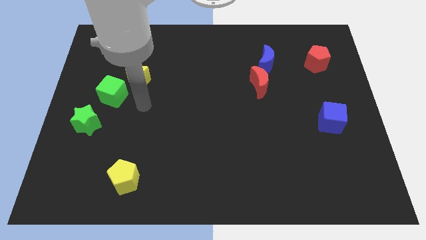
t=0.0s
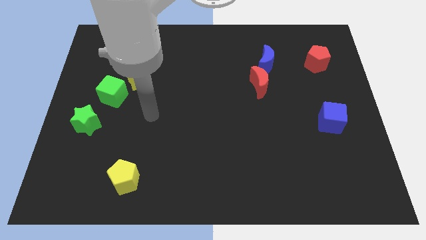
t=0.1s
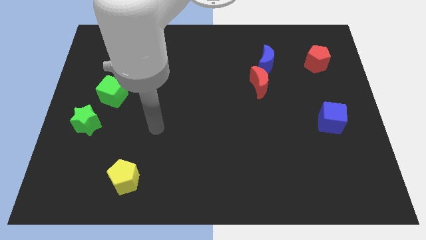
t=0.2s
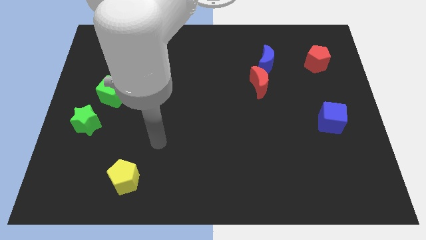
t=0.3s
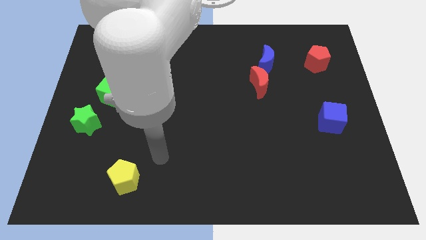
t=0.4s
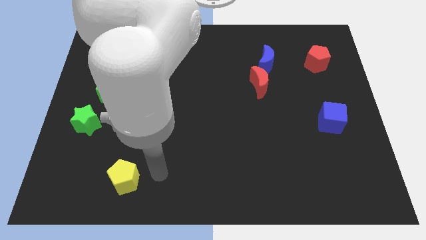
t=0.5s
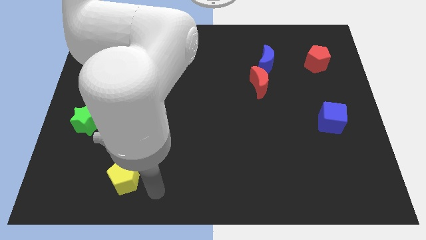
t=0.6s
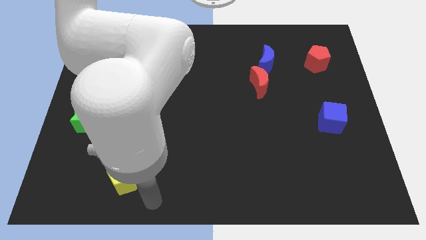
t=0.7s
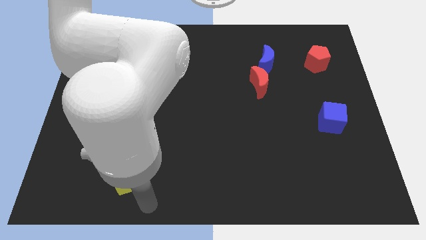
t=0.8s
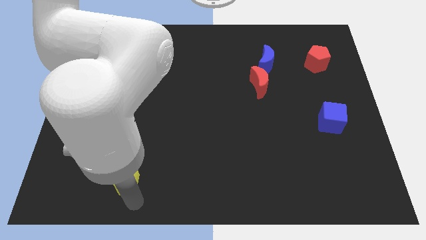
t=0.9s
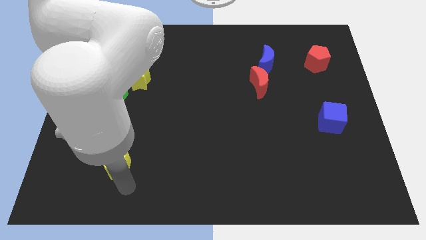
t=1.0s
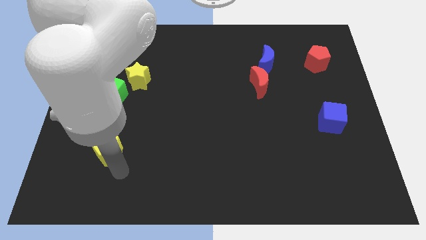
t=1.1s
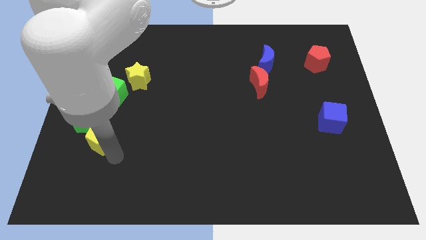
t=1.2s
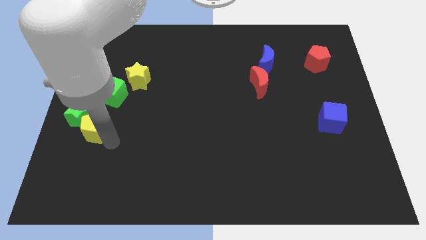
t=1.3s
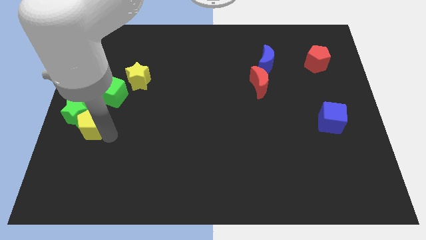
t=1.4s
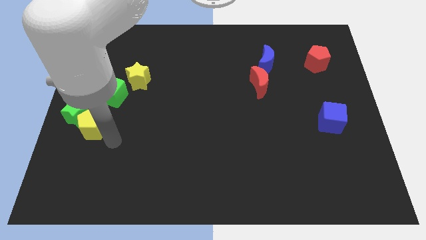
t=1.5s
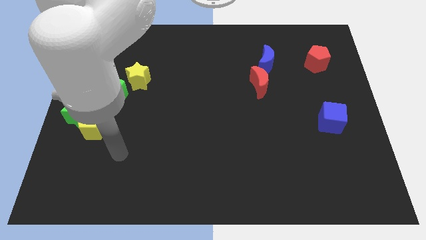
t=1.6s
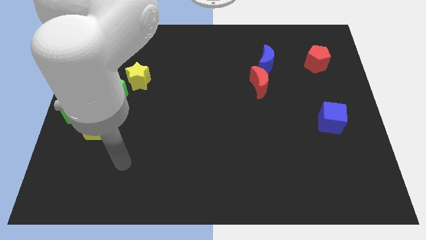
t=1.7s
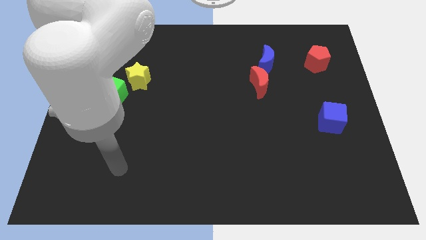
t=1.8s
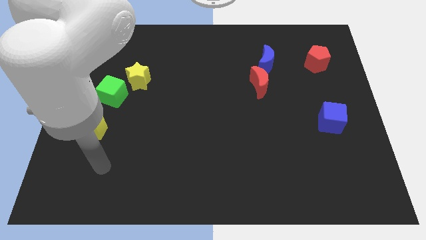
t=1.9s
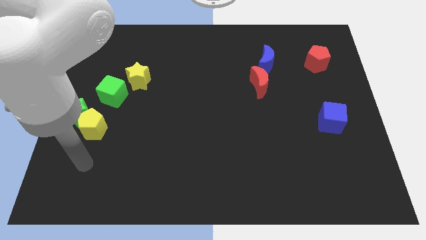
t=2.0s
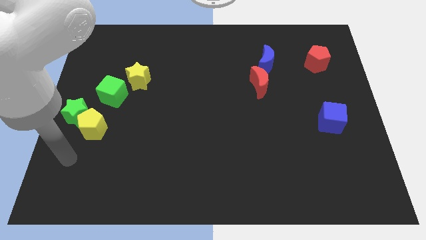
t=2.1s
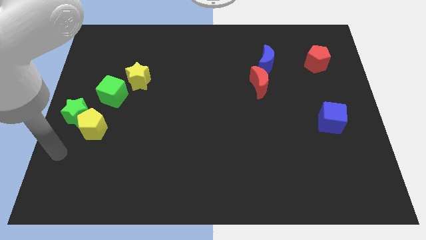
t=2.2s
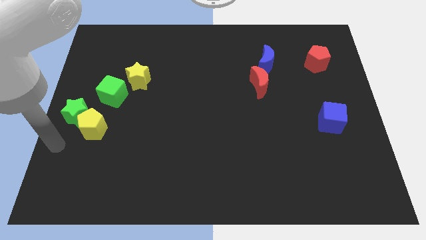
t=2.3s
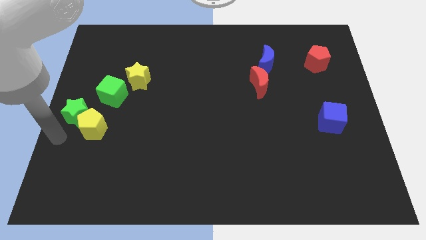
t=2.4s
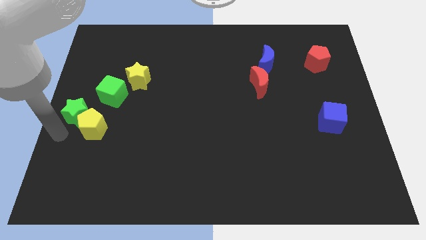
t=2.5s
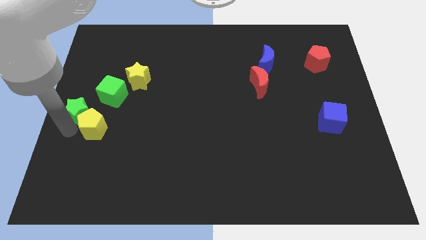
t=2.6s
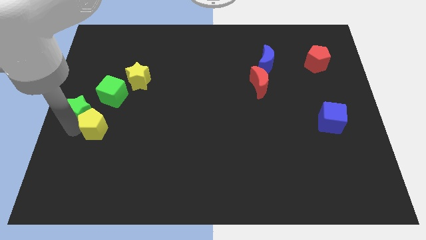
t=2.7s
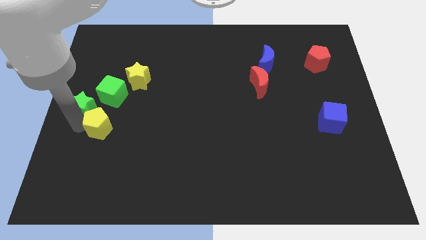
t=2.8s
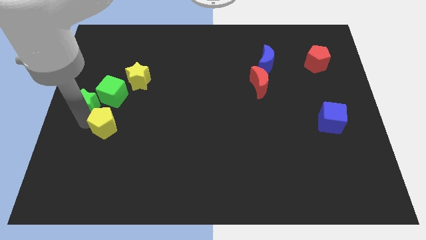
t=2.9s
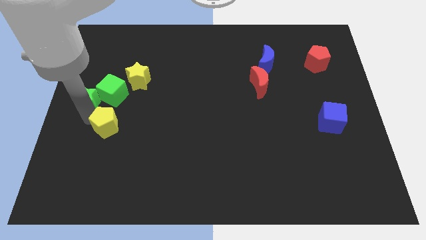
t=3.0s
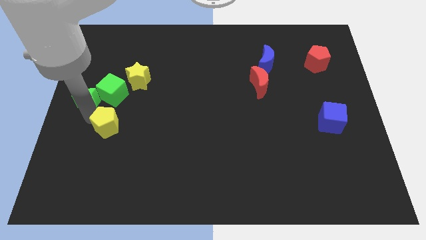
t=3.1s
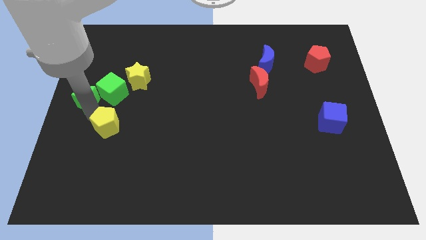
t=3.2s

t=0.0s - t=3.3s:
slide the green star into the green cube

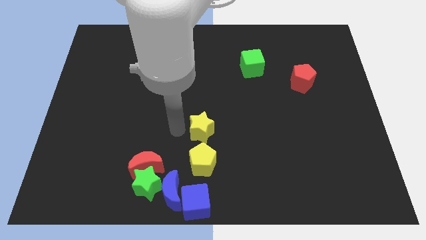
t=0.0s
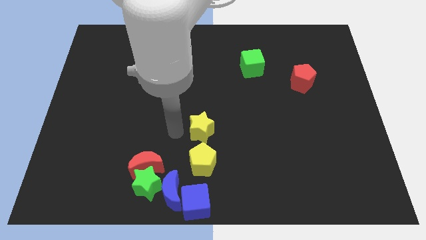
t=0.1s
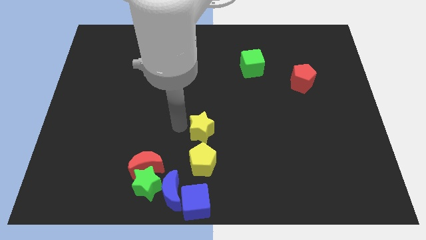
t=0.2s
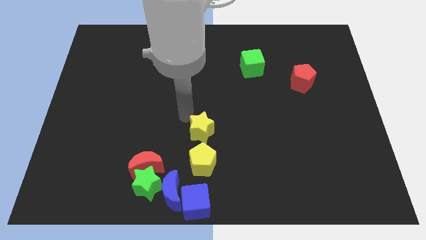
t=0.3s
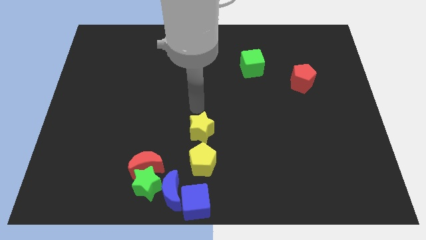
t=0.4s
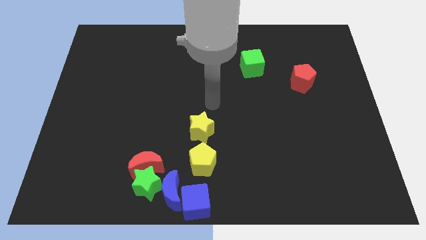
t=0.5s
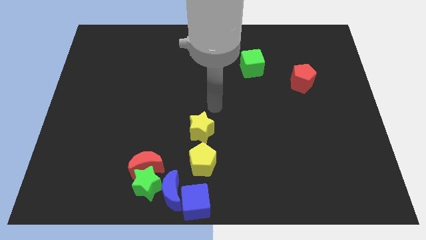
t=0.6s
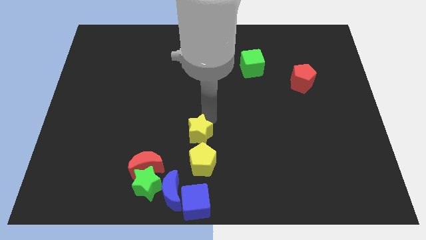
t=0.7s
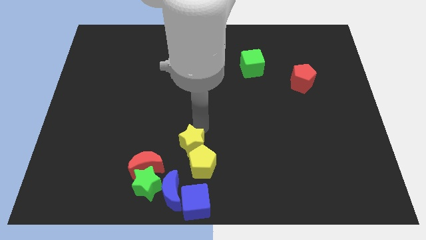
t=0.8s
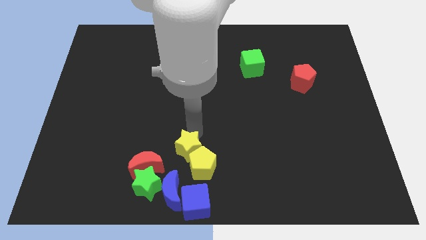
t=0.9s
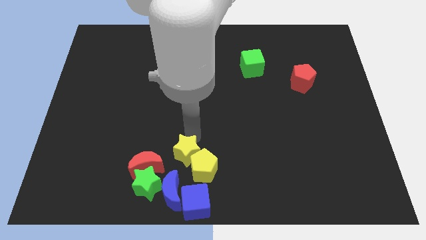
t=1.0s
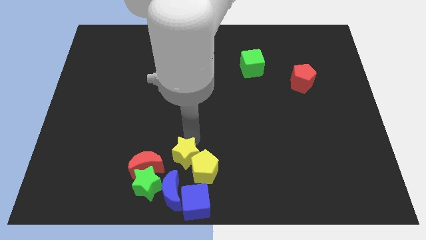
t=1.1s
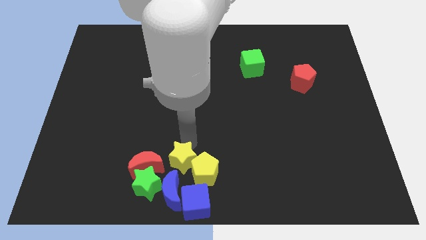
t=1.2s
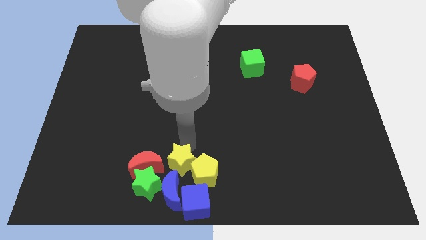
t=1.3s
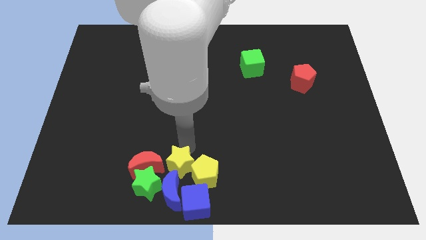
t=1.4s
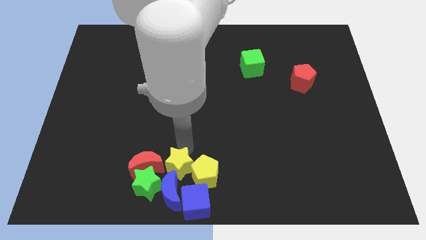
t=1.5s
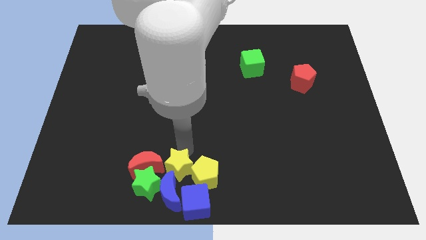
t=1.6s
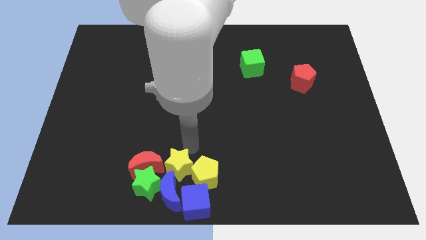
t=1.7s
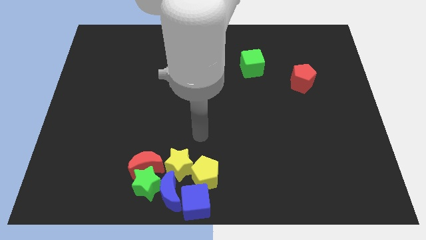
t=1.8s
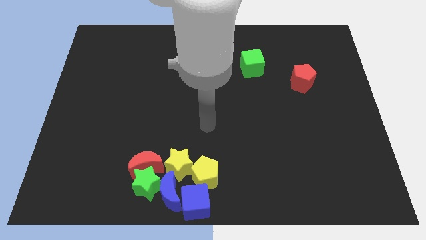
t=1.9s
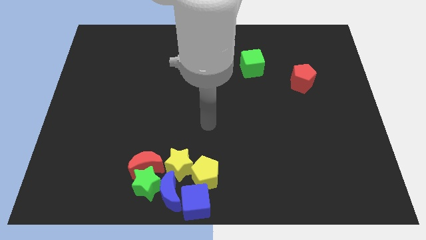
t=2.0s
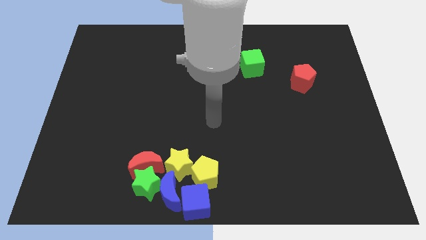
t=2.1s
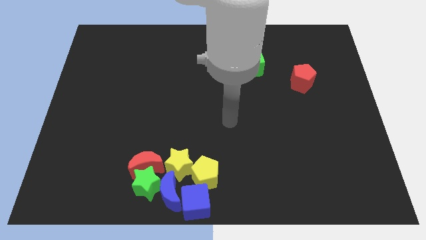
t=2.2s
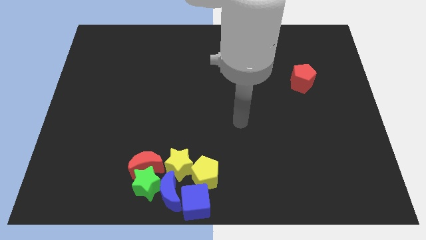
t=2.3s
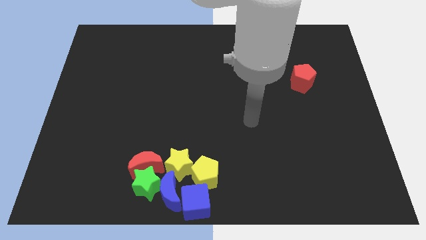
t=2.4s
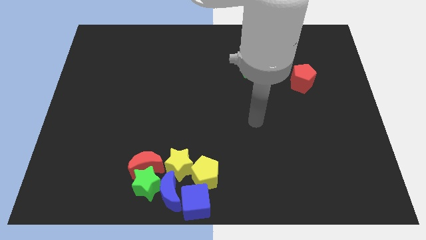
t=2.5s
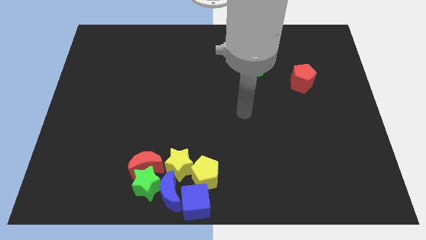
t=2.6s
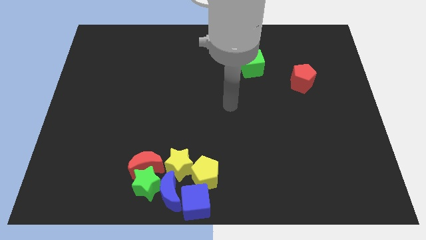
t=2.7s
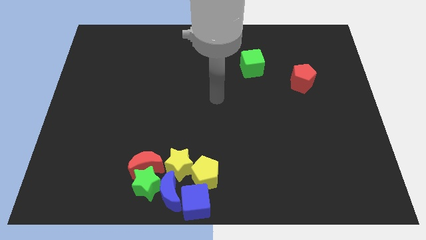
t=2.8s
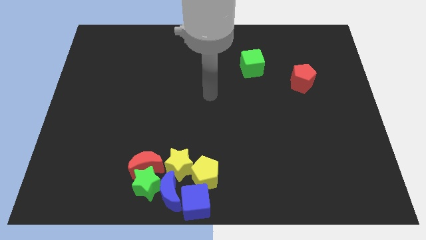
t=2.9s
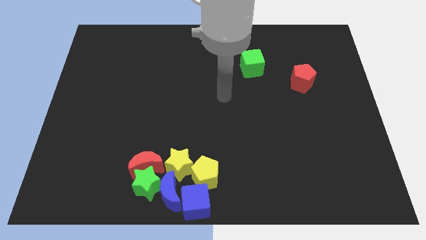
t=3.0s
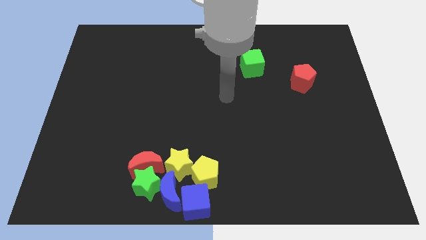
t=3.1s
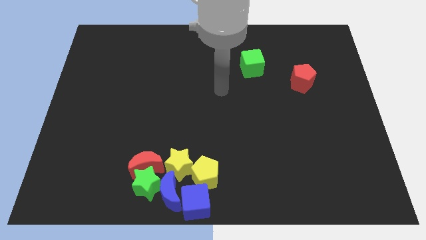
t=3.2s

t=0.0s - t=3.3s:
push the yellow star into the blue crescent

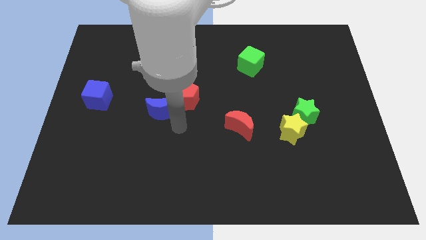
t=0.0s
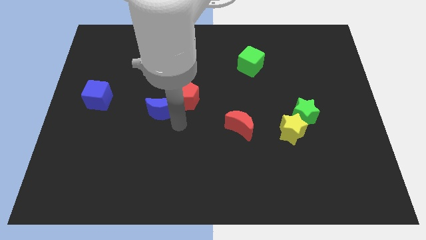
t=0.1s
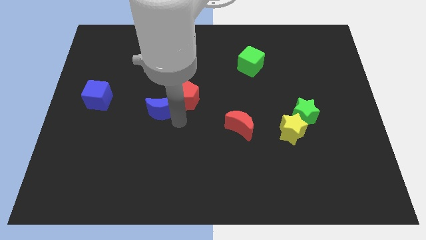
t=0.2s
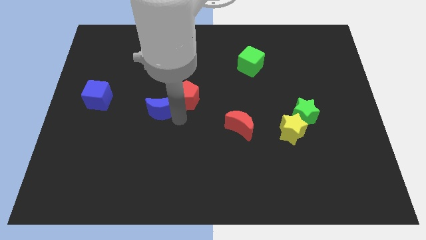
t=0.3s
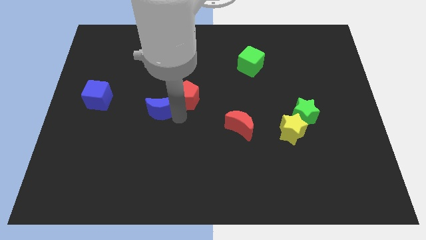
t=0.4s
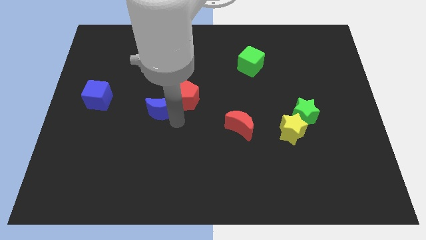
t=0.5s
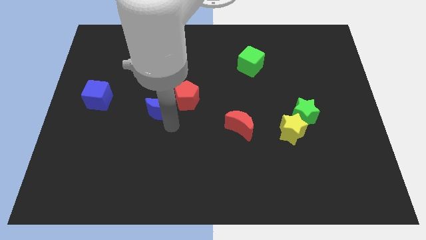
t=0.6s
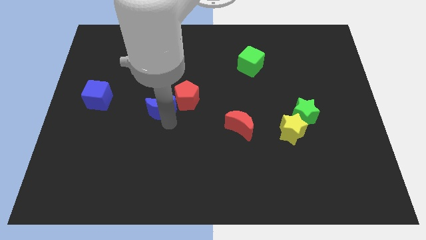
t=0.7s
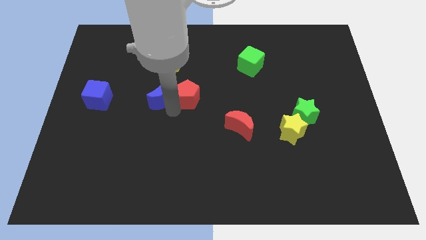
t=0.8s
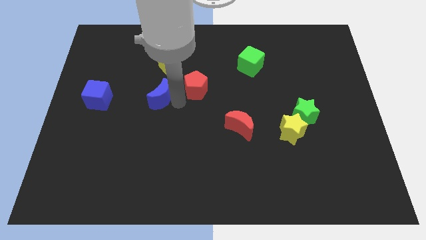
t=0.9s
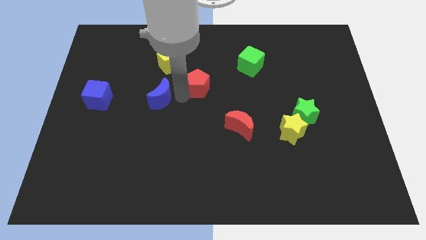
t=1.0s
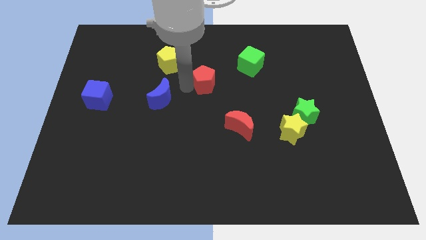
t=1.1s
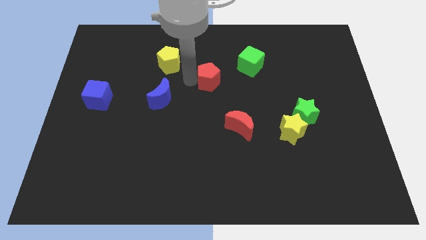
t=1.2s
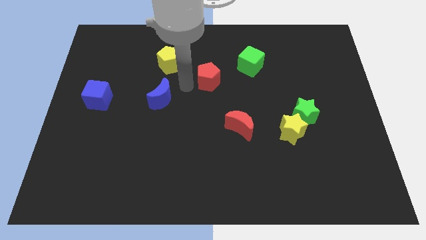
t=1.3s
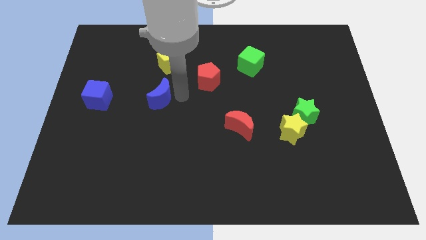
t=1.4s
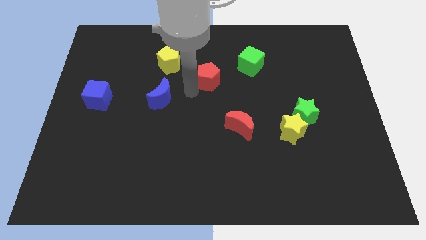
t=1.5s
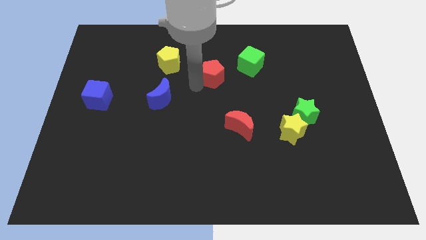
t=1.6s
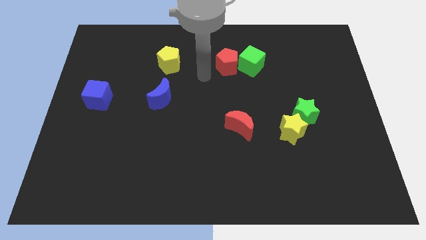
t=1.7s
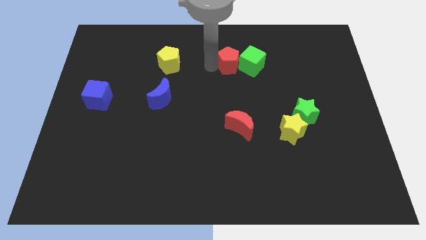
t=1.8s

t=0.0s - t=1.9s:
push red pentagon towards the green cube

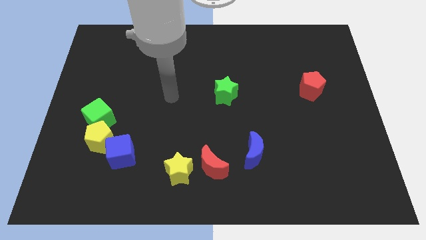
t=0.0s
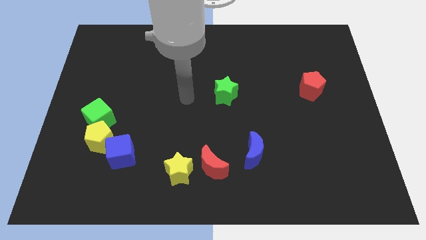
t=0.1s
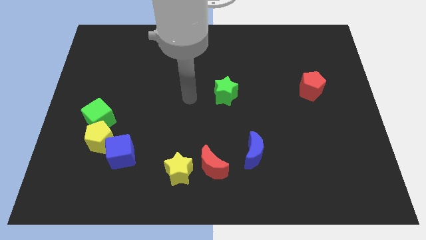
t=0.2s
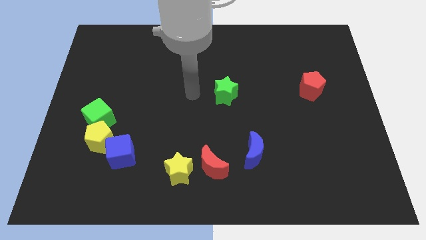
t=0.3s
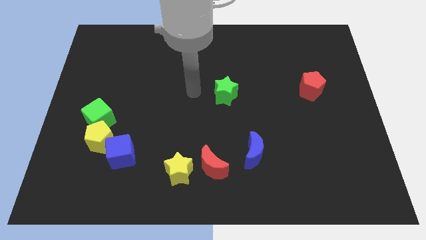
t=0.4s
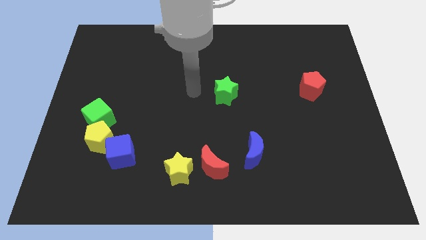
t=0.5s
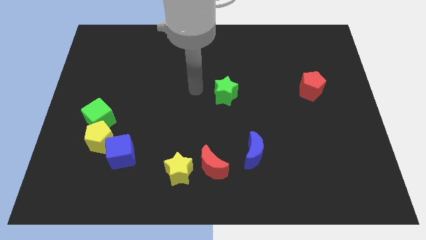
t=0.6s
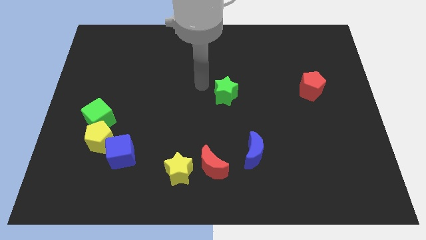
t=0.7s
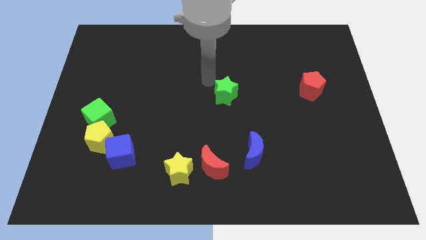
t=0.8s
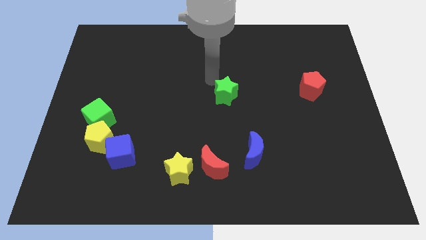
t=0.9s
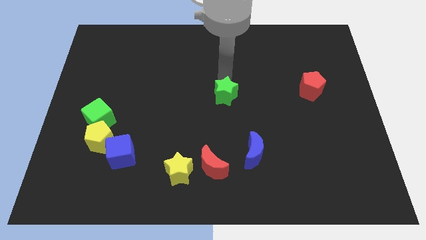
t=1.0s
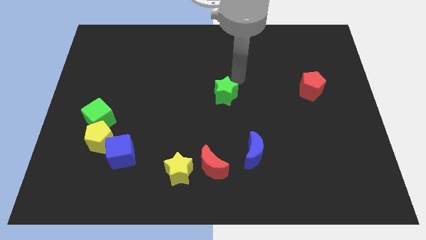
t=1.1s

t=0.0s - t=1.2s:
move your arm to the top of the green star
